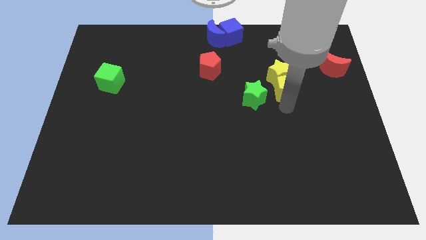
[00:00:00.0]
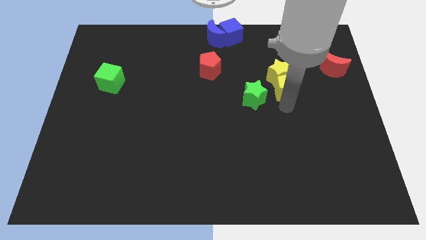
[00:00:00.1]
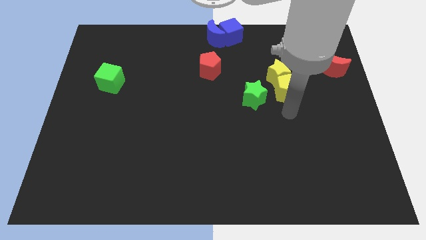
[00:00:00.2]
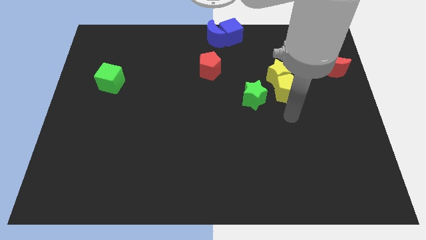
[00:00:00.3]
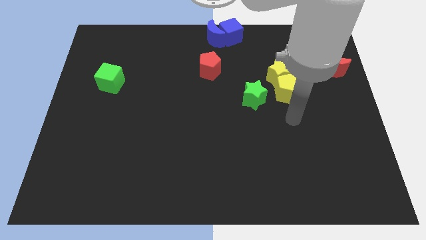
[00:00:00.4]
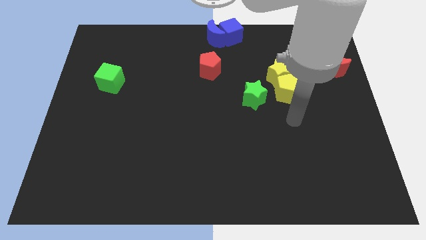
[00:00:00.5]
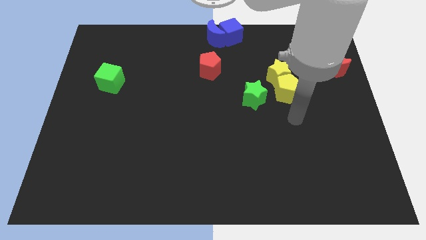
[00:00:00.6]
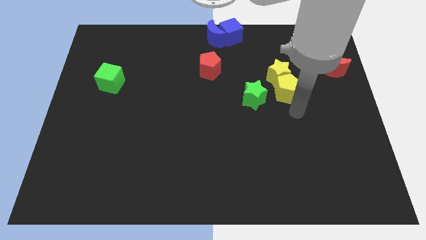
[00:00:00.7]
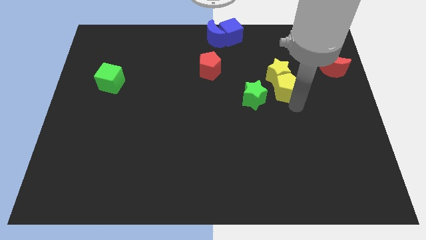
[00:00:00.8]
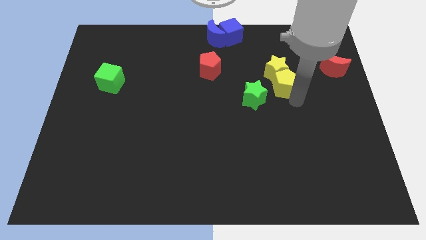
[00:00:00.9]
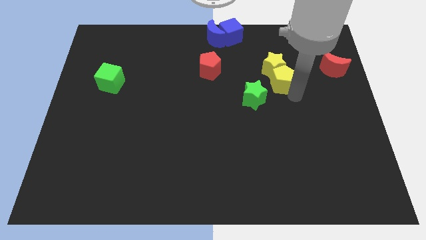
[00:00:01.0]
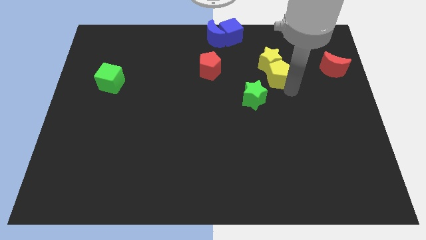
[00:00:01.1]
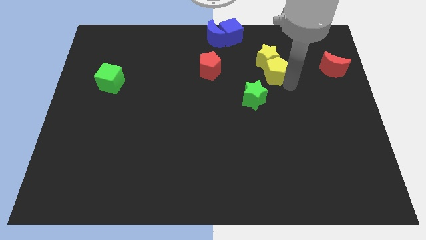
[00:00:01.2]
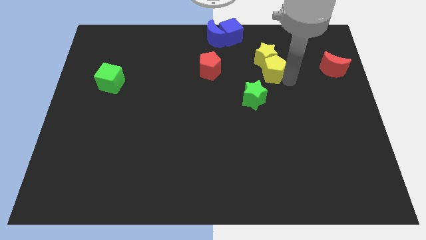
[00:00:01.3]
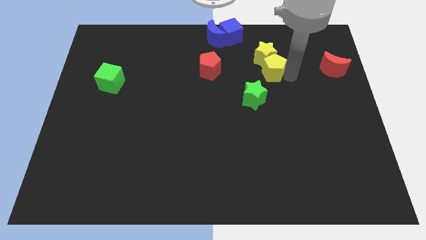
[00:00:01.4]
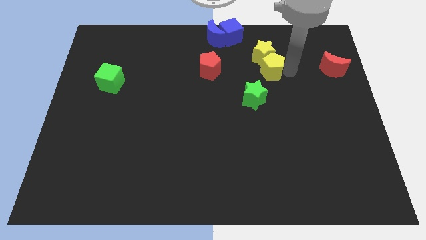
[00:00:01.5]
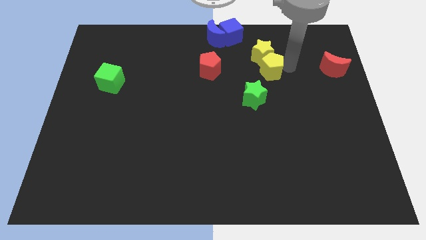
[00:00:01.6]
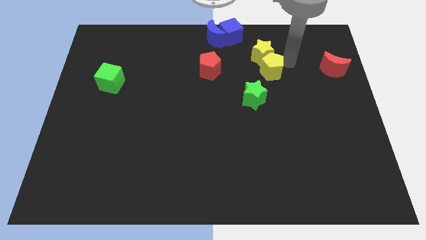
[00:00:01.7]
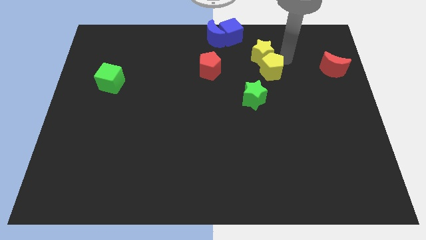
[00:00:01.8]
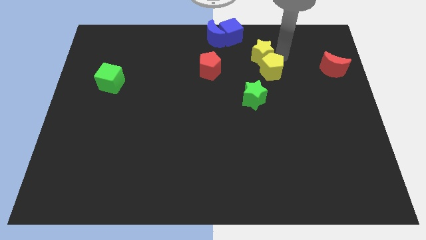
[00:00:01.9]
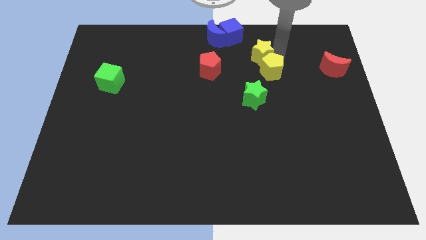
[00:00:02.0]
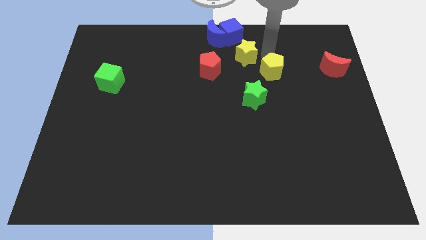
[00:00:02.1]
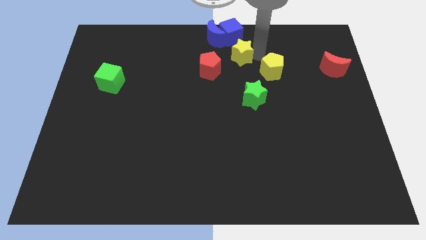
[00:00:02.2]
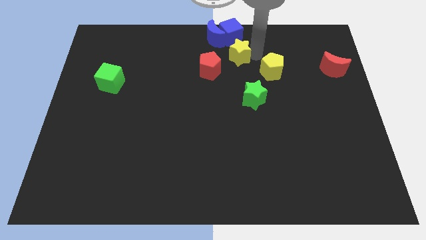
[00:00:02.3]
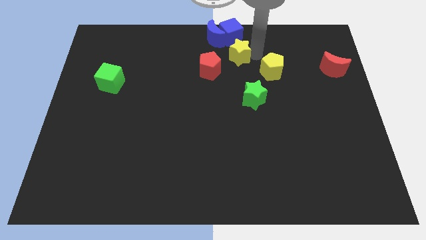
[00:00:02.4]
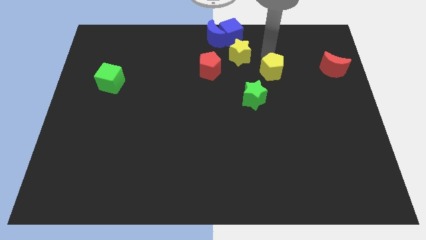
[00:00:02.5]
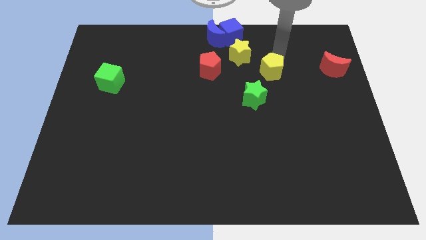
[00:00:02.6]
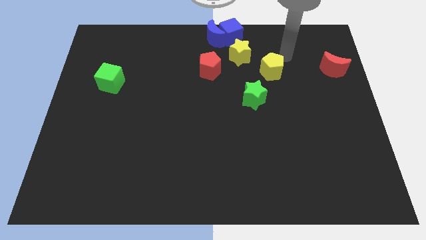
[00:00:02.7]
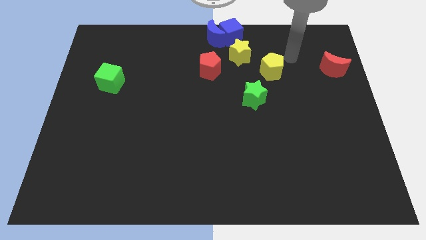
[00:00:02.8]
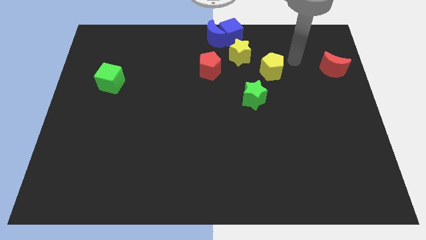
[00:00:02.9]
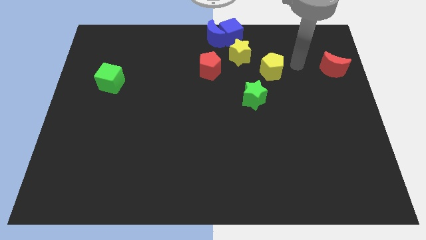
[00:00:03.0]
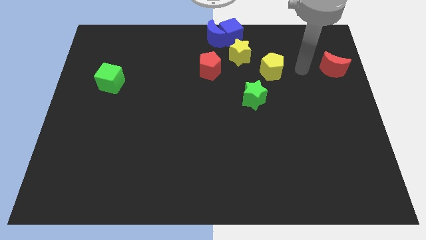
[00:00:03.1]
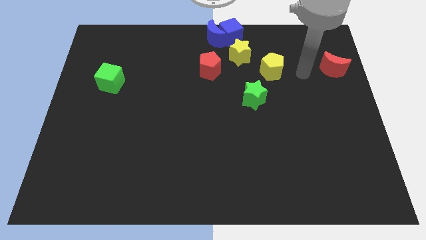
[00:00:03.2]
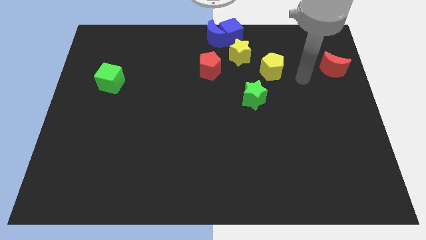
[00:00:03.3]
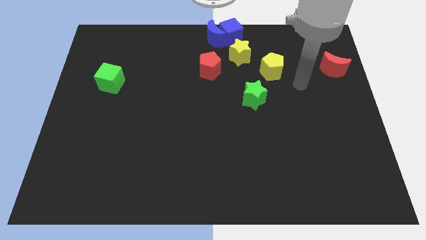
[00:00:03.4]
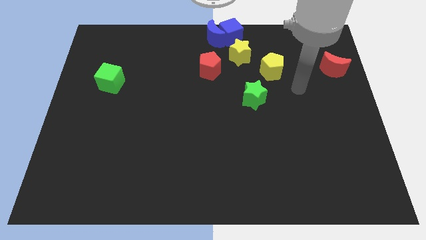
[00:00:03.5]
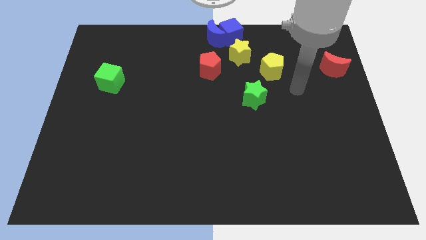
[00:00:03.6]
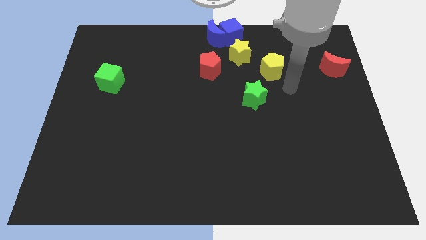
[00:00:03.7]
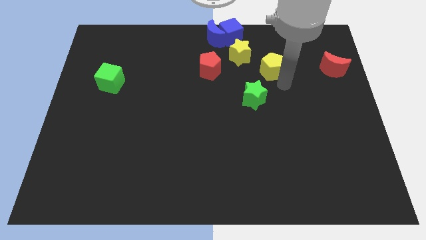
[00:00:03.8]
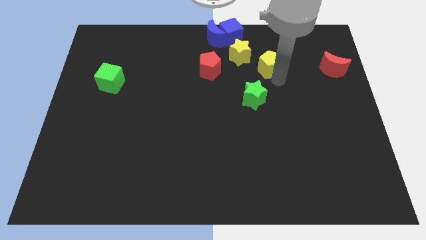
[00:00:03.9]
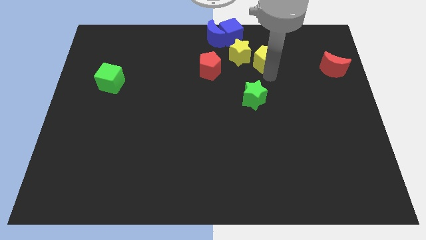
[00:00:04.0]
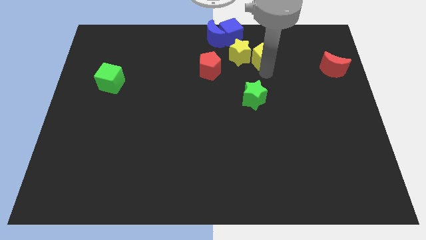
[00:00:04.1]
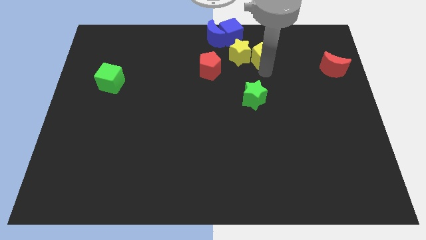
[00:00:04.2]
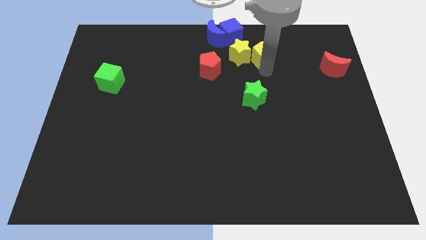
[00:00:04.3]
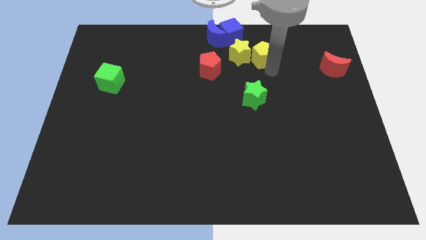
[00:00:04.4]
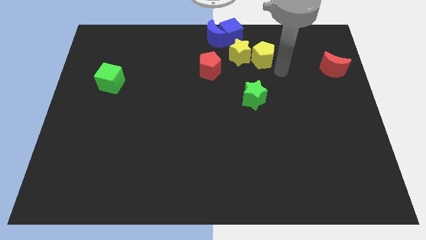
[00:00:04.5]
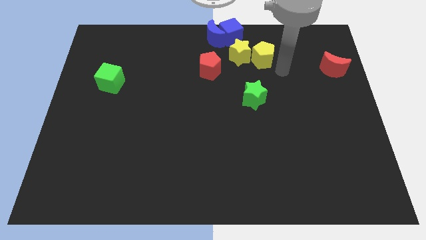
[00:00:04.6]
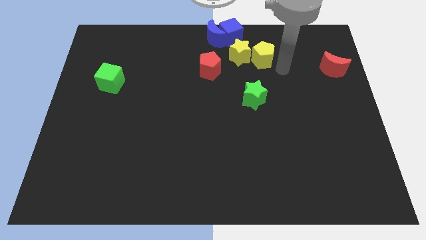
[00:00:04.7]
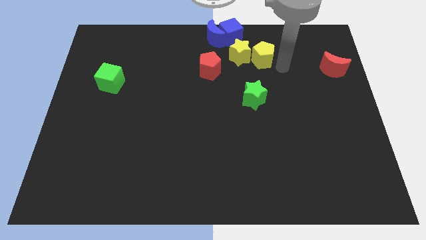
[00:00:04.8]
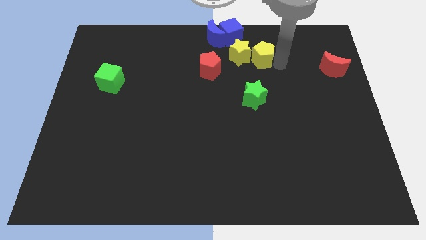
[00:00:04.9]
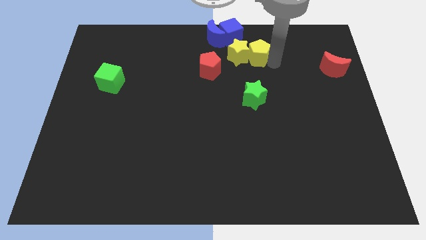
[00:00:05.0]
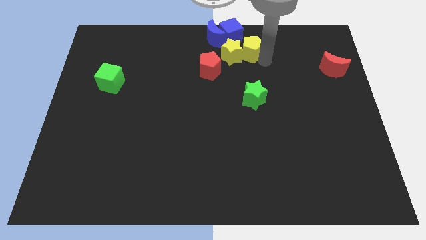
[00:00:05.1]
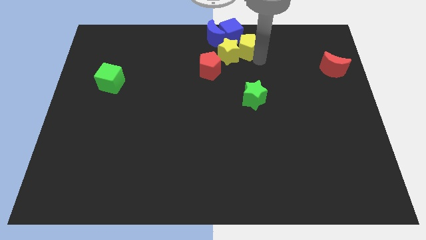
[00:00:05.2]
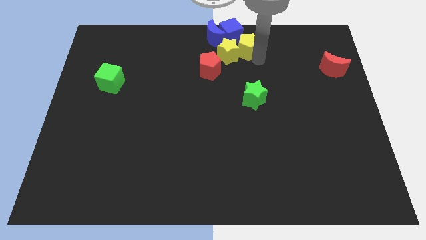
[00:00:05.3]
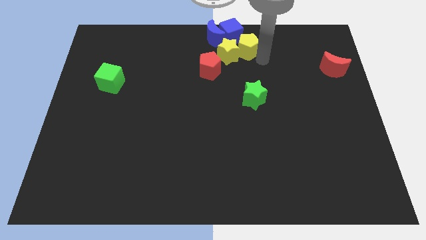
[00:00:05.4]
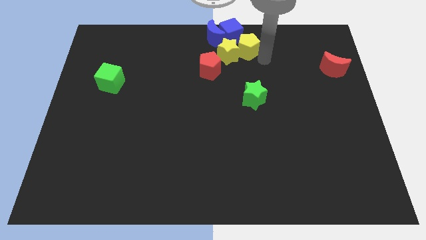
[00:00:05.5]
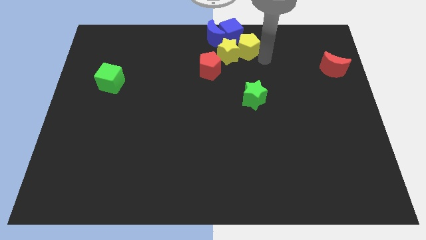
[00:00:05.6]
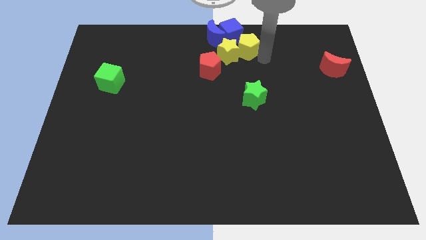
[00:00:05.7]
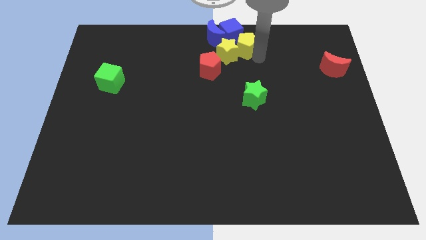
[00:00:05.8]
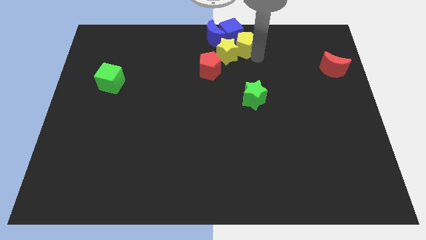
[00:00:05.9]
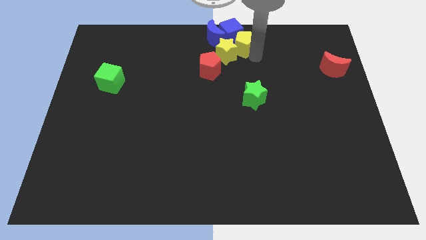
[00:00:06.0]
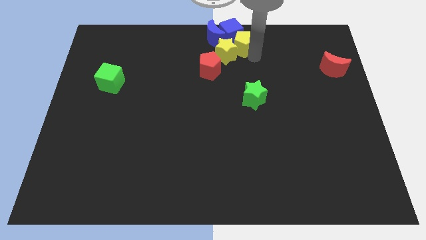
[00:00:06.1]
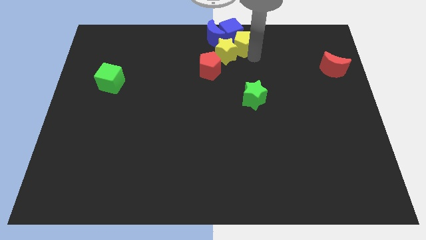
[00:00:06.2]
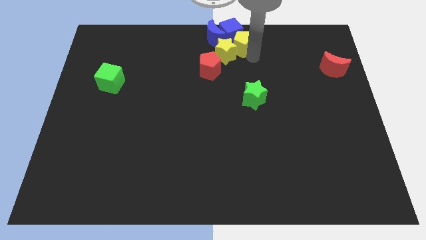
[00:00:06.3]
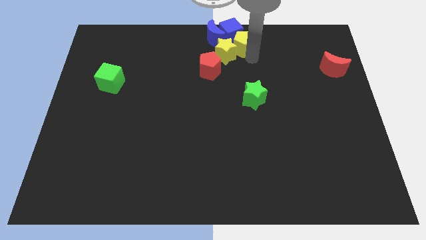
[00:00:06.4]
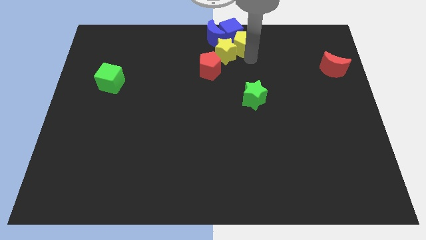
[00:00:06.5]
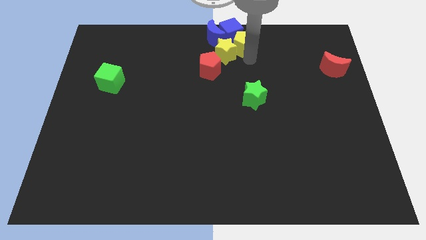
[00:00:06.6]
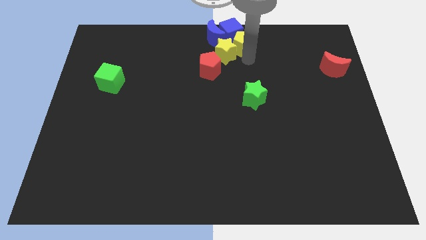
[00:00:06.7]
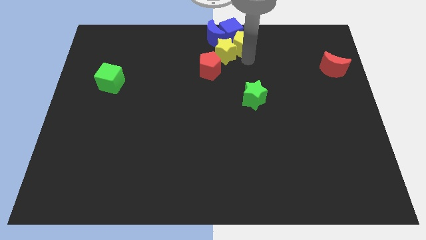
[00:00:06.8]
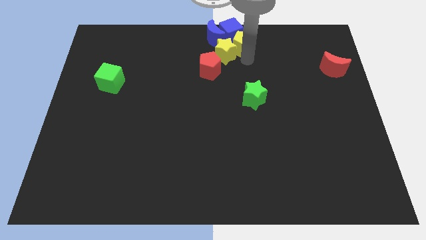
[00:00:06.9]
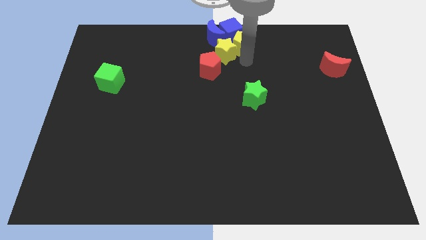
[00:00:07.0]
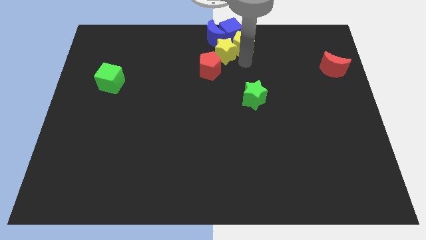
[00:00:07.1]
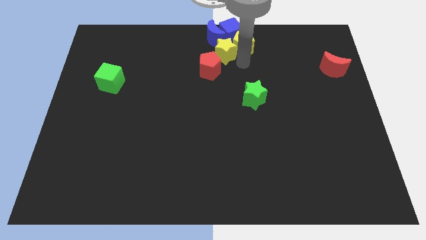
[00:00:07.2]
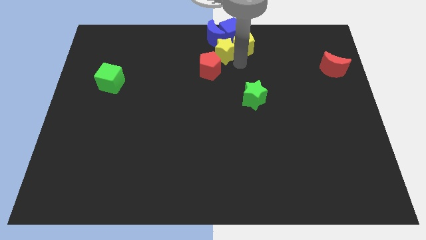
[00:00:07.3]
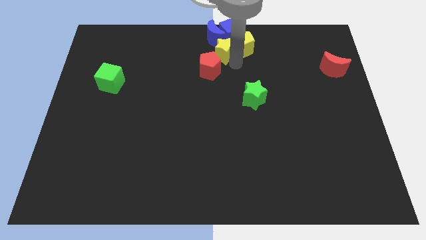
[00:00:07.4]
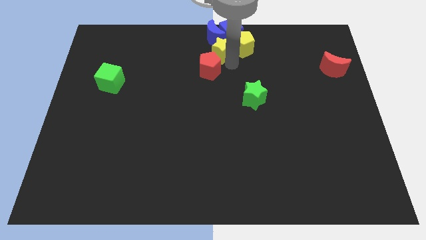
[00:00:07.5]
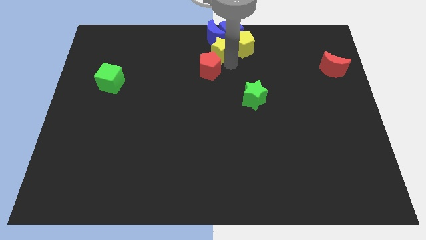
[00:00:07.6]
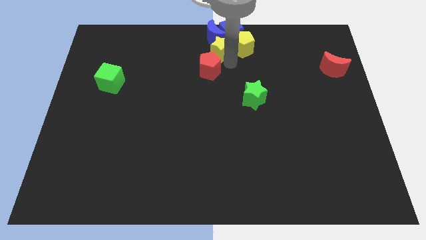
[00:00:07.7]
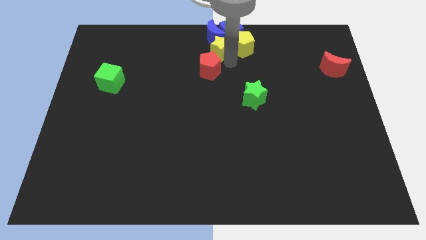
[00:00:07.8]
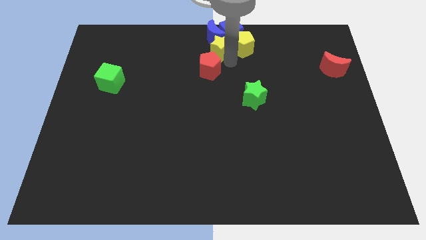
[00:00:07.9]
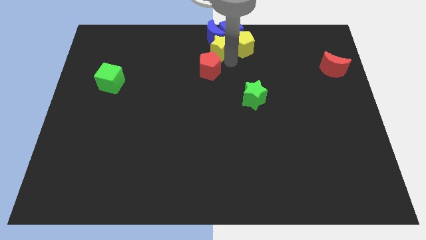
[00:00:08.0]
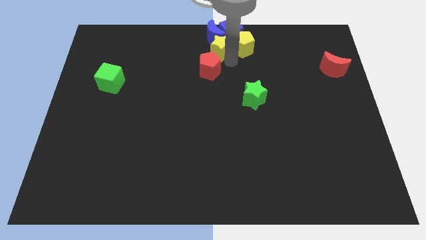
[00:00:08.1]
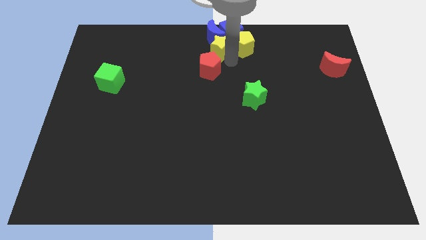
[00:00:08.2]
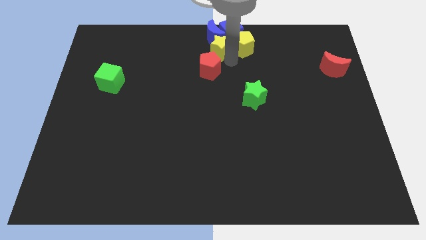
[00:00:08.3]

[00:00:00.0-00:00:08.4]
push the yellow pentagon and yellow star into the blue blocks

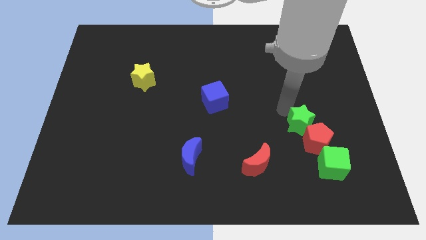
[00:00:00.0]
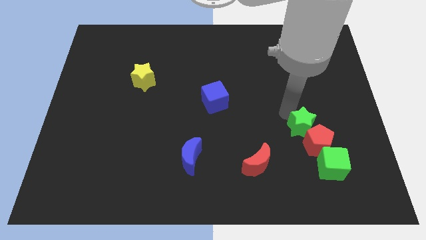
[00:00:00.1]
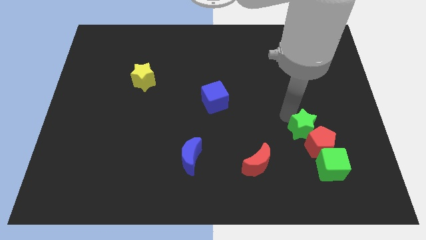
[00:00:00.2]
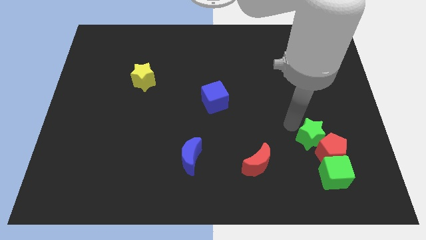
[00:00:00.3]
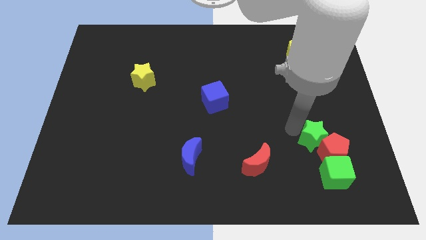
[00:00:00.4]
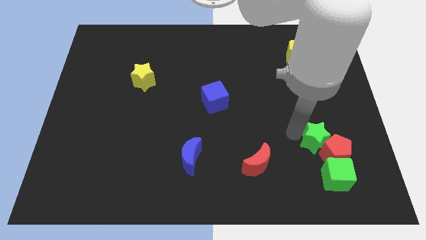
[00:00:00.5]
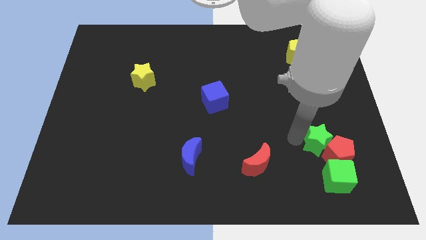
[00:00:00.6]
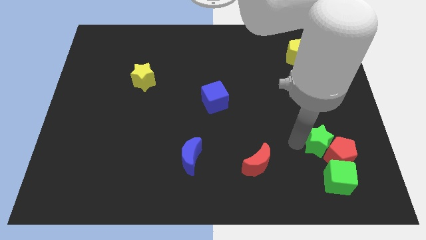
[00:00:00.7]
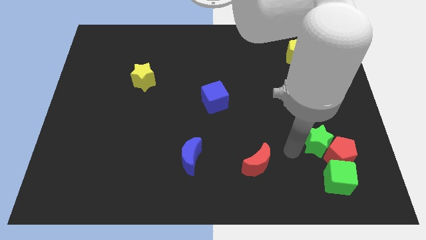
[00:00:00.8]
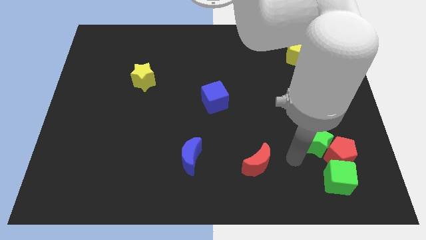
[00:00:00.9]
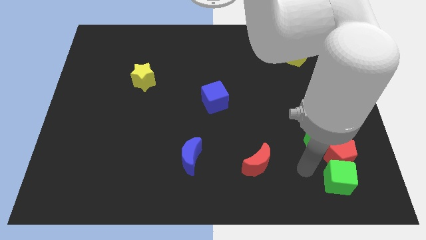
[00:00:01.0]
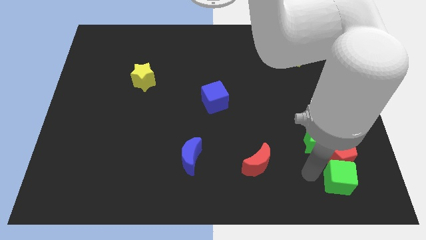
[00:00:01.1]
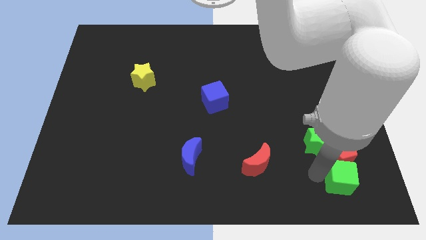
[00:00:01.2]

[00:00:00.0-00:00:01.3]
move the green star along with the red crescent close to the top of the green cube
